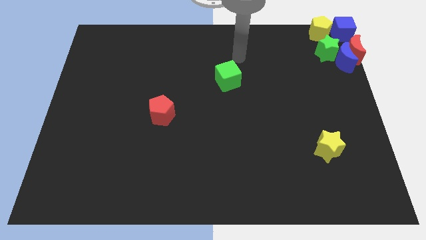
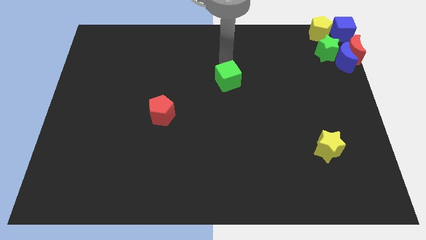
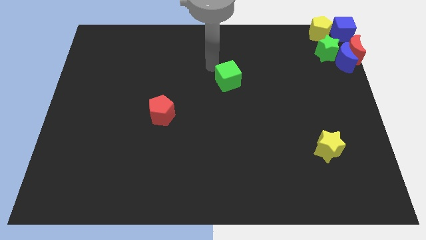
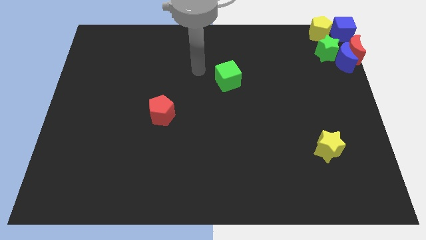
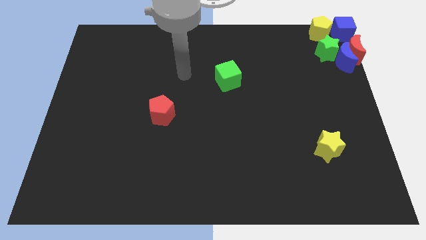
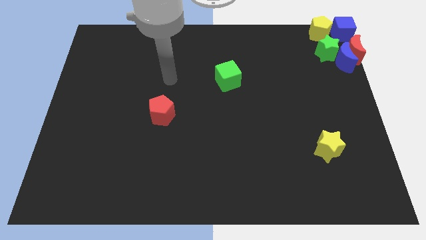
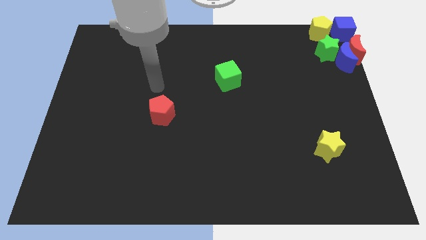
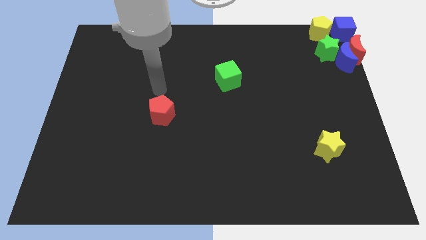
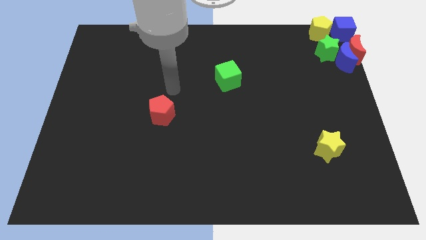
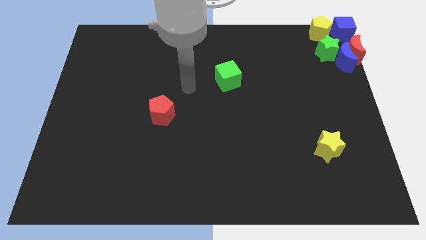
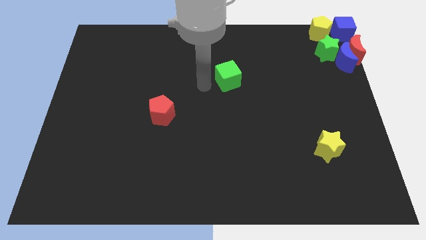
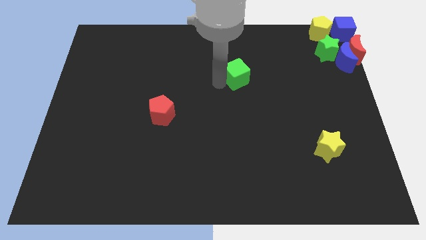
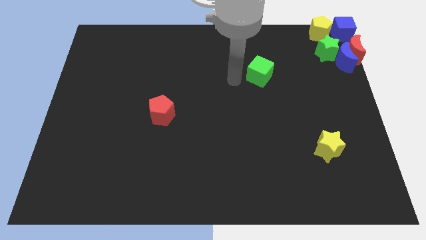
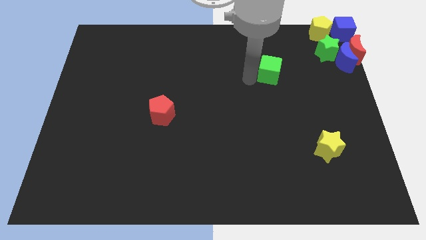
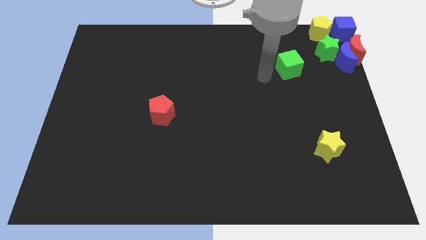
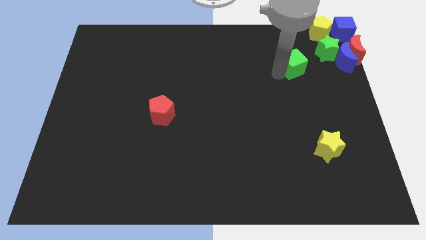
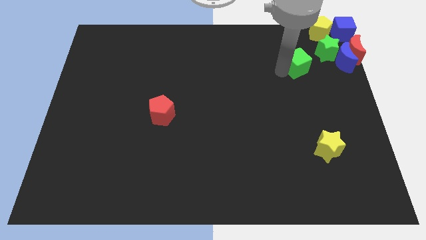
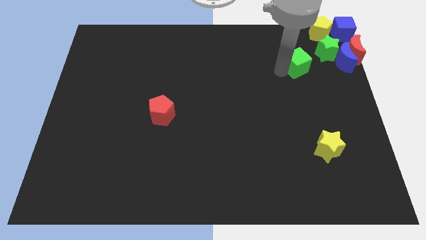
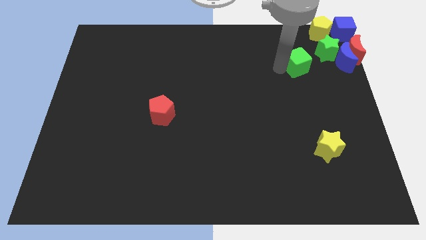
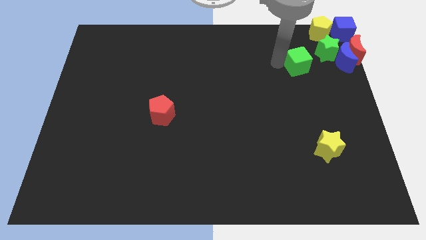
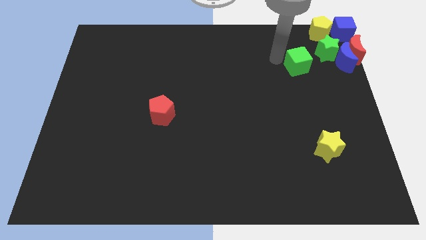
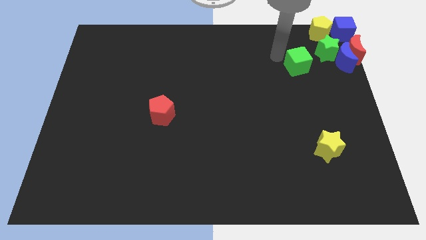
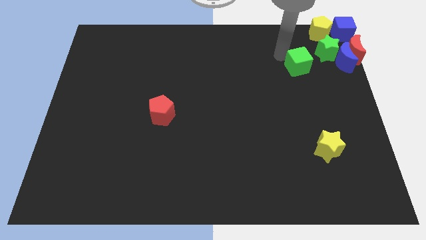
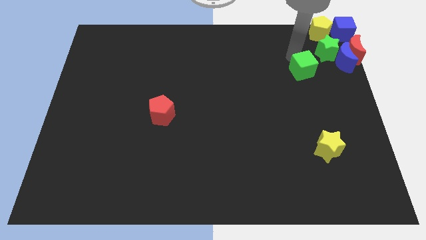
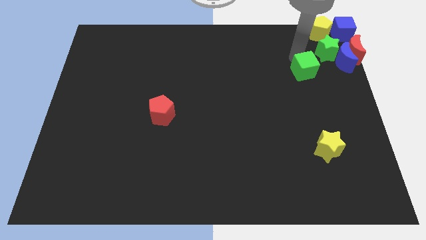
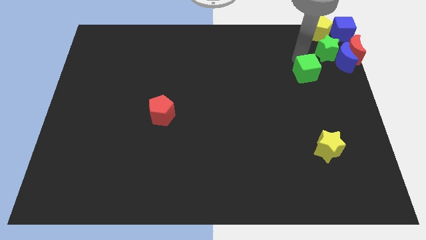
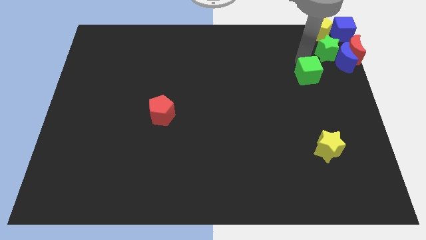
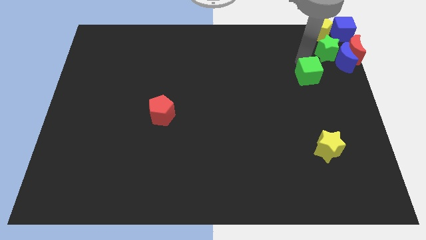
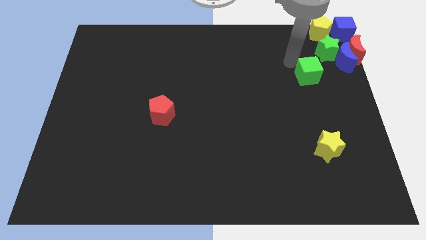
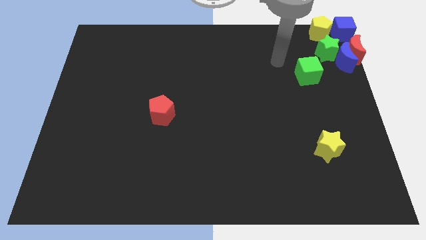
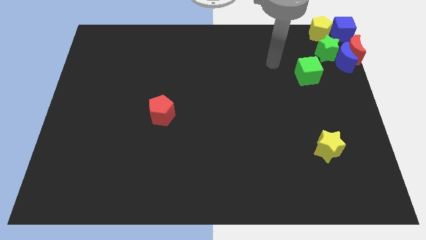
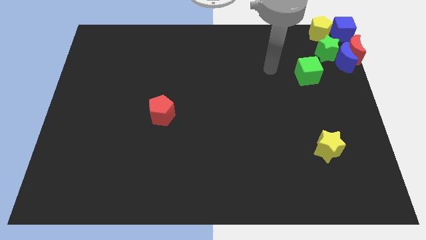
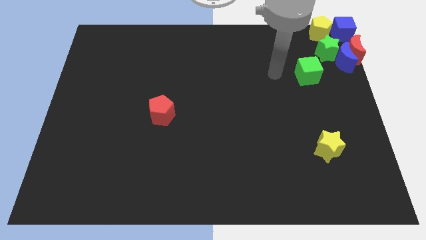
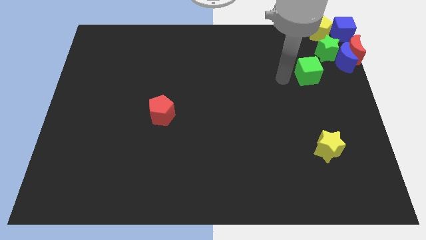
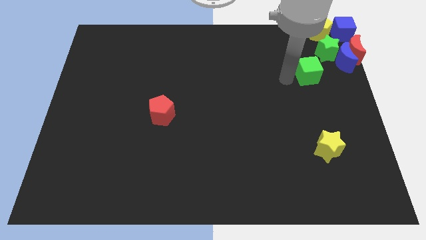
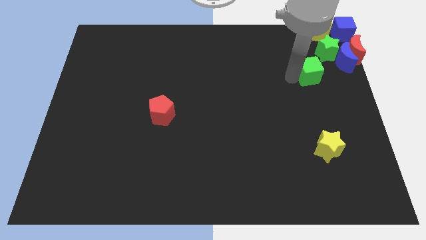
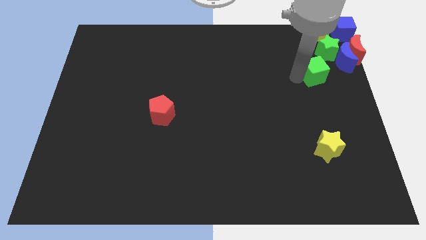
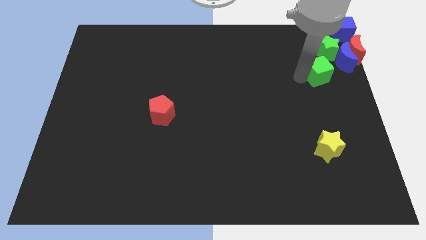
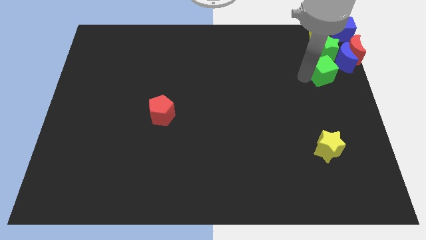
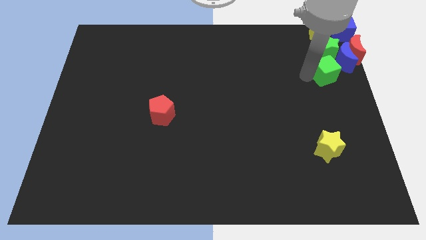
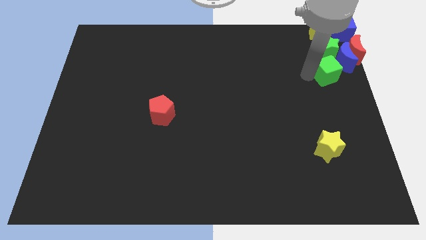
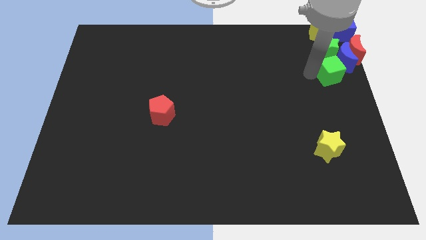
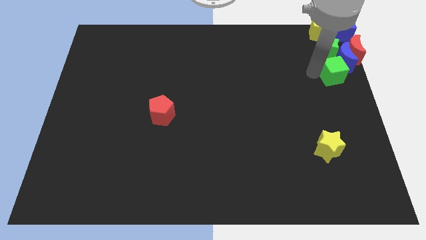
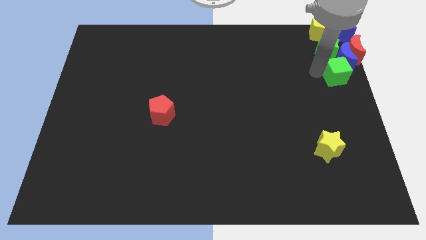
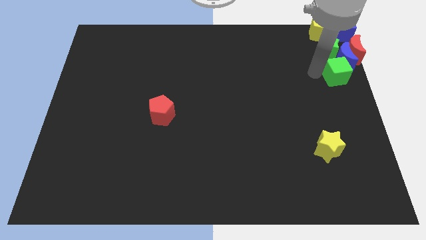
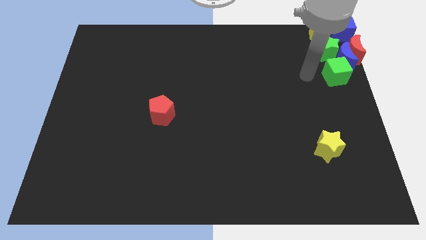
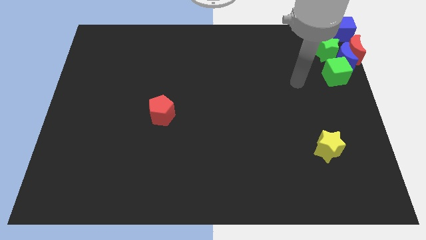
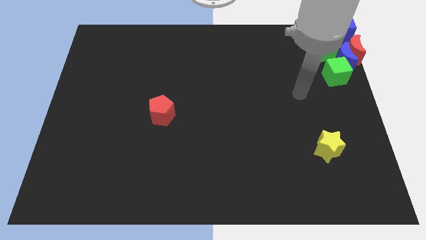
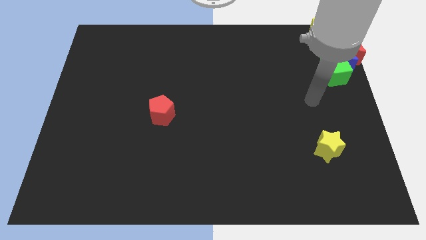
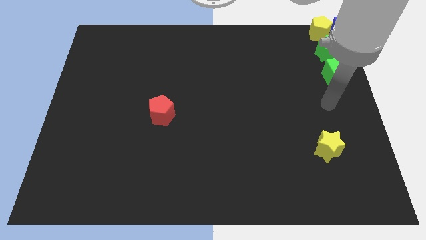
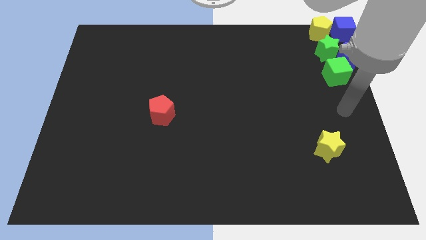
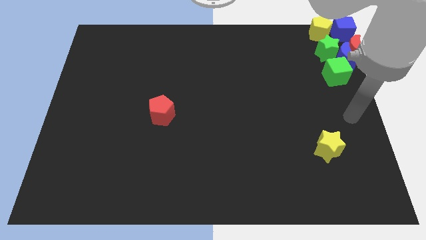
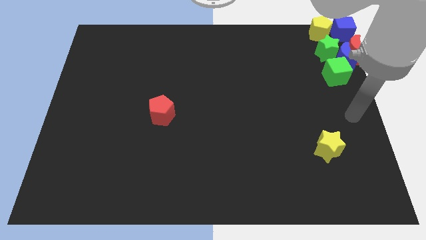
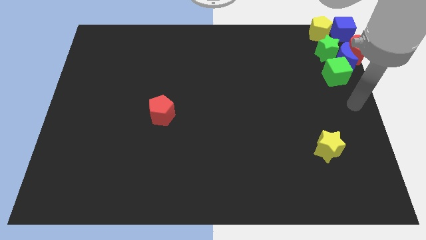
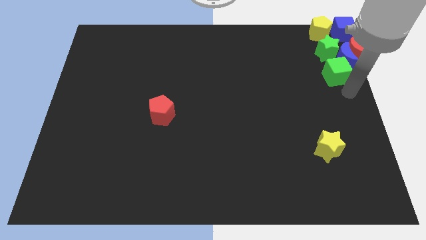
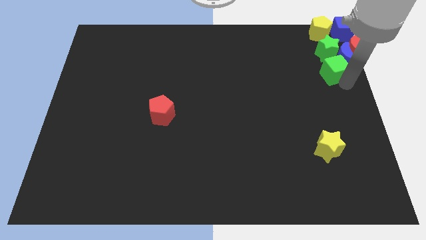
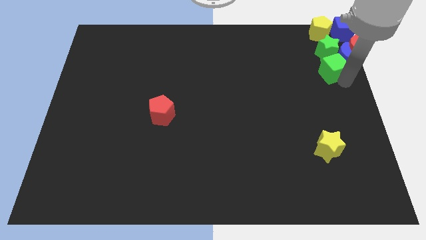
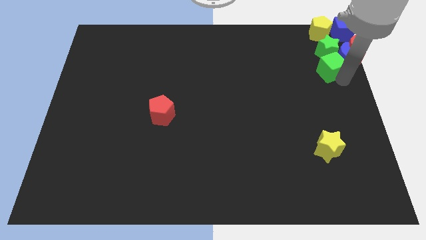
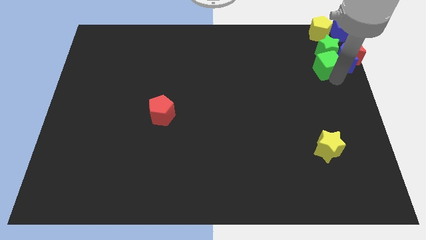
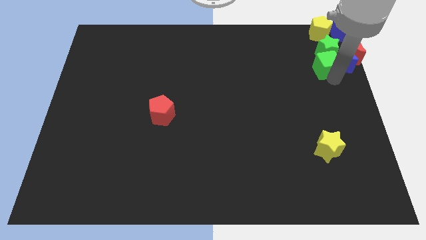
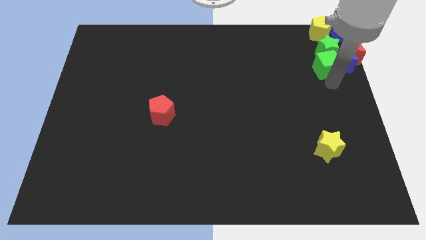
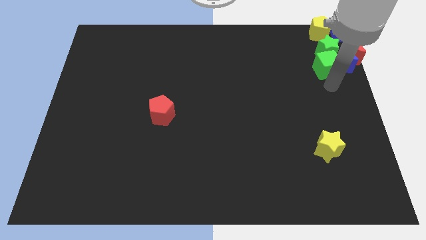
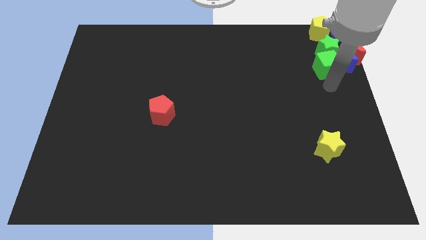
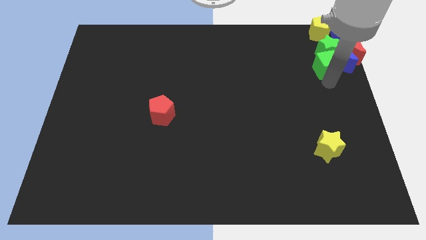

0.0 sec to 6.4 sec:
move the green cube to the bottom side of the green star

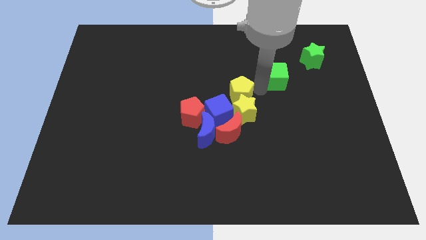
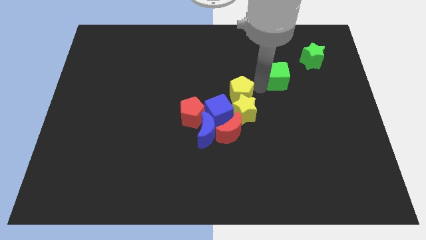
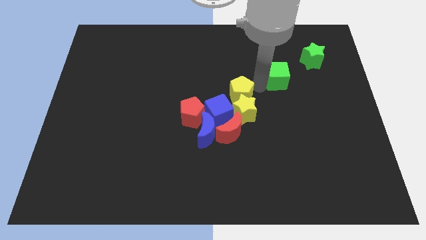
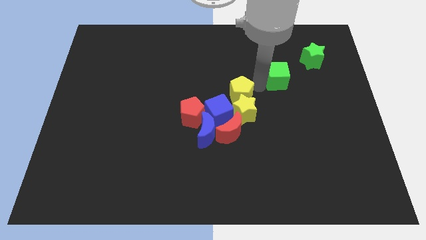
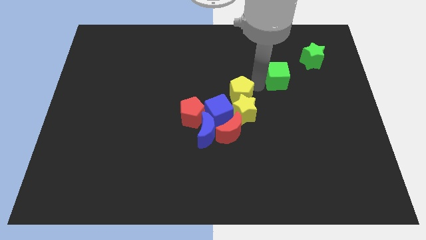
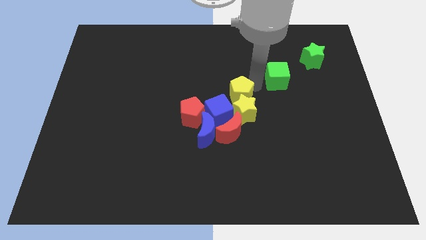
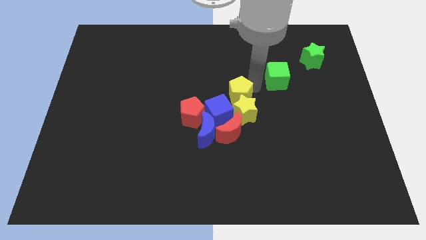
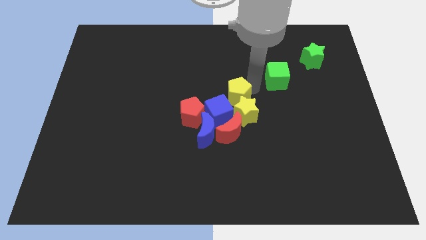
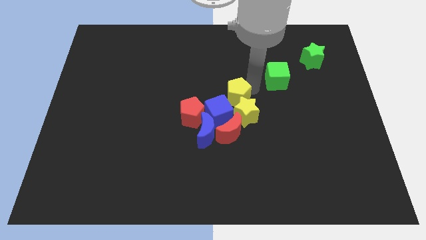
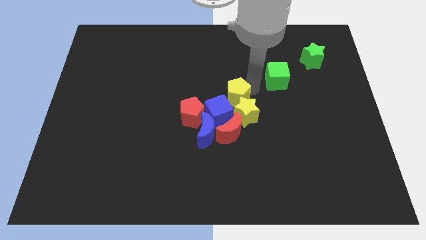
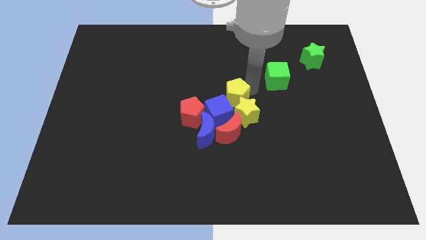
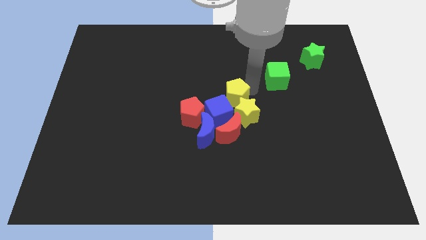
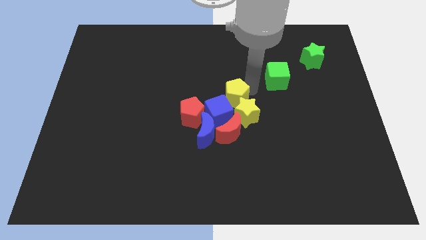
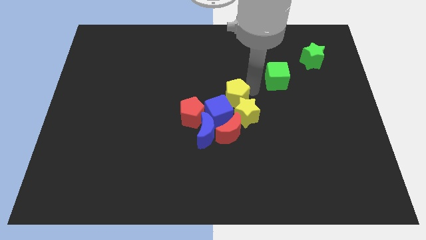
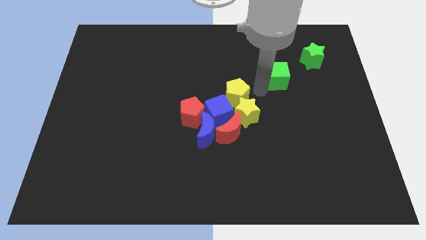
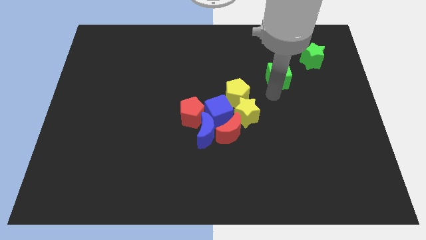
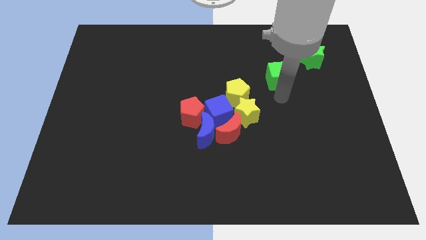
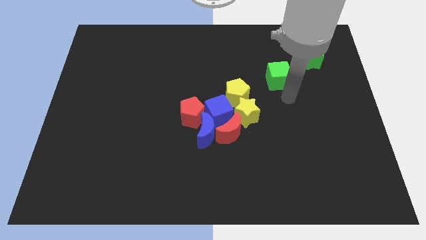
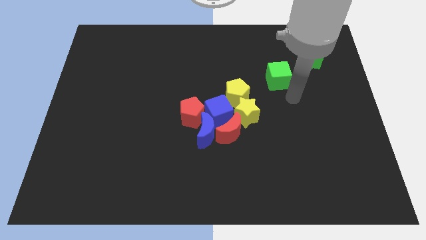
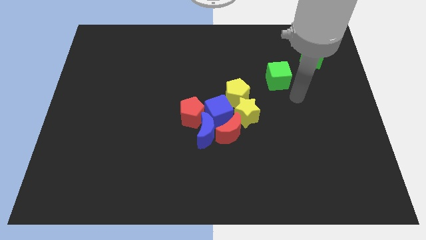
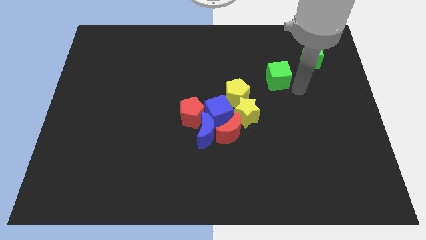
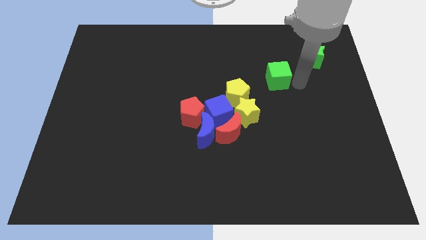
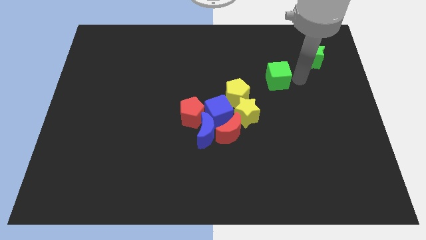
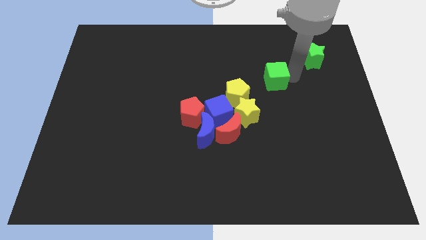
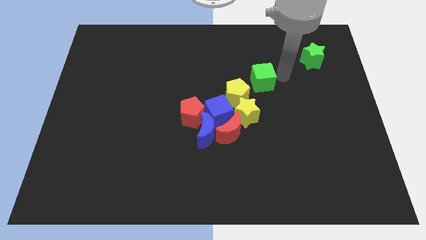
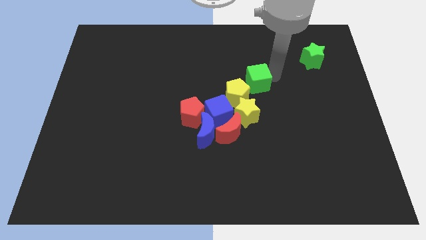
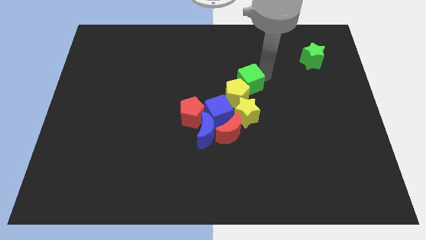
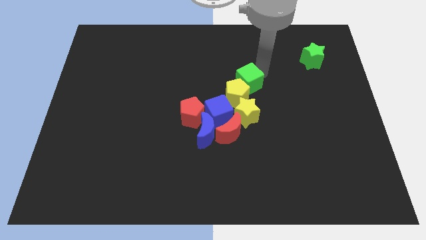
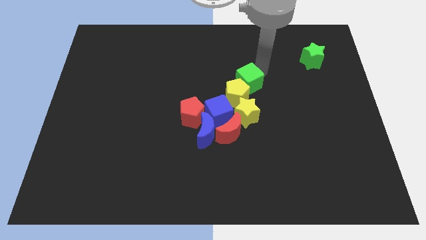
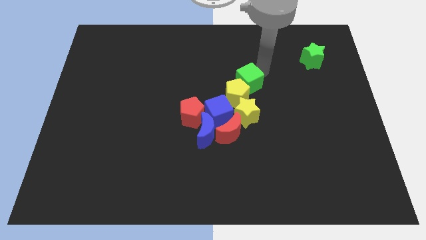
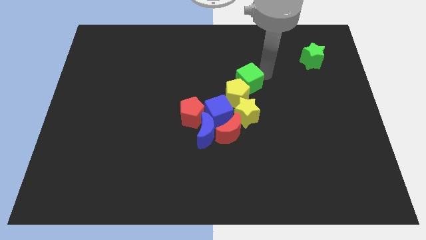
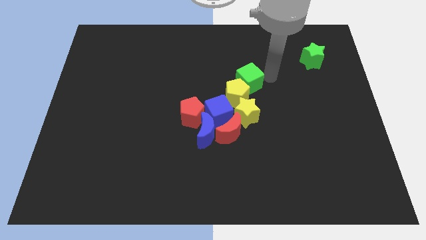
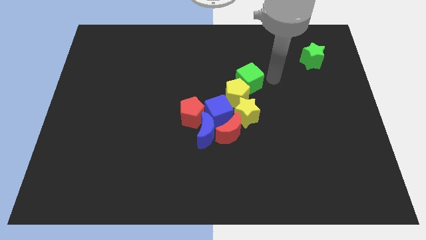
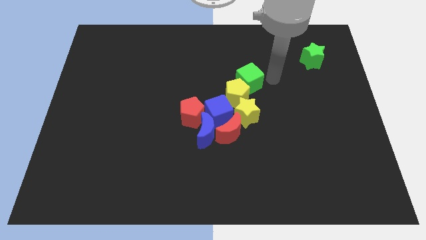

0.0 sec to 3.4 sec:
push green star near yellow pentagon
